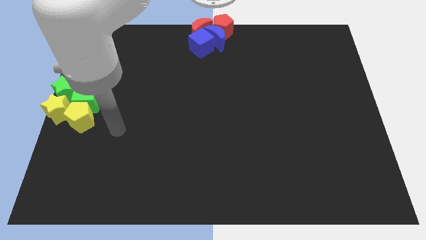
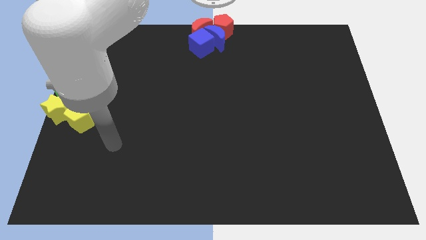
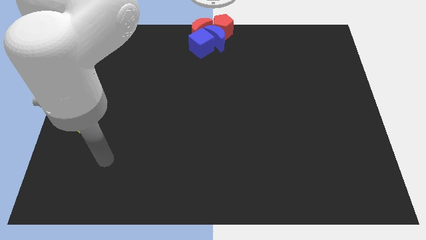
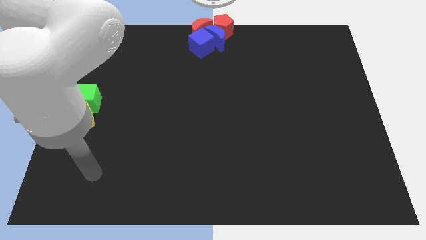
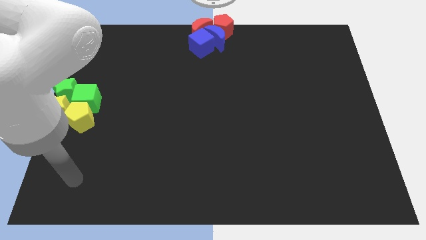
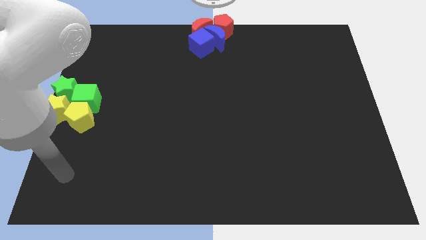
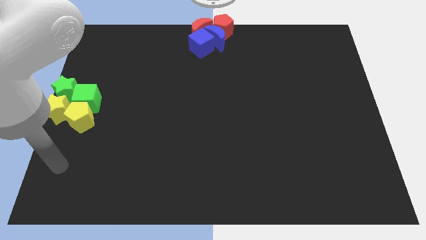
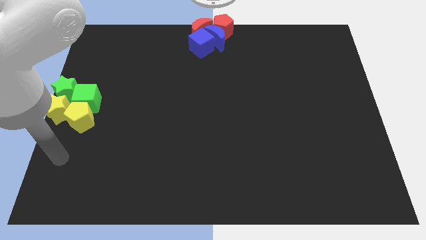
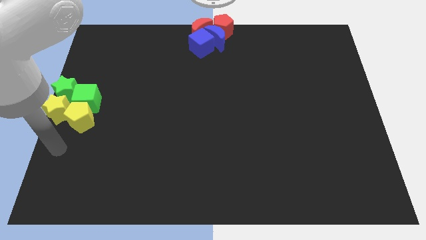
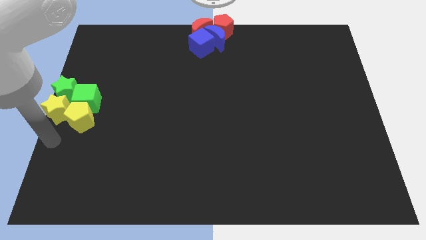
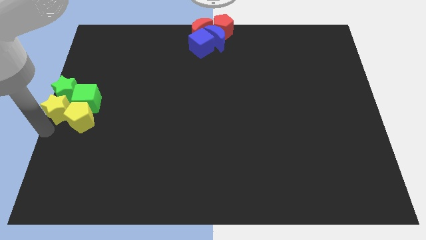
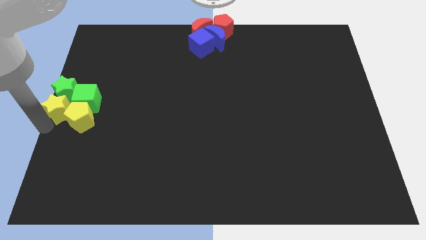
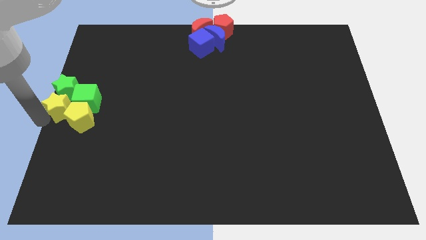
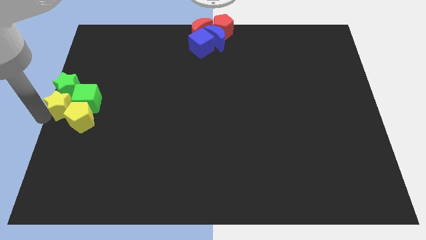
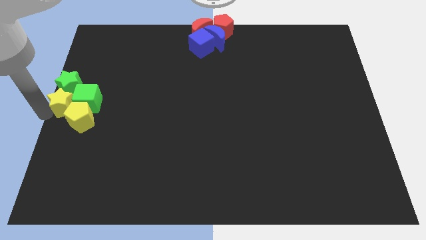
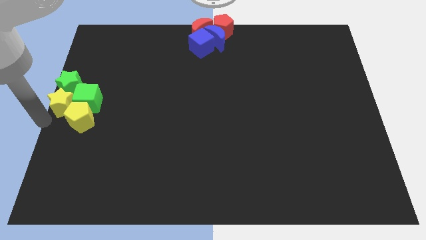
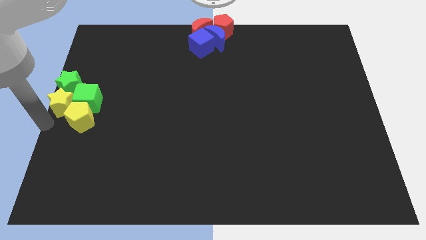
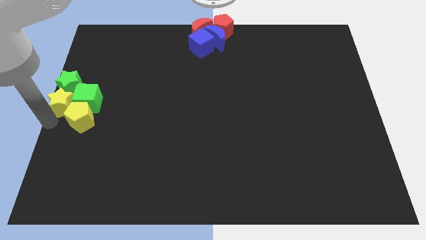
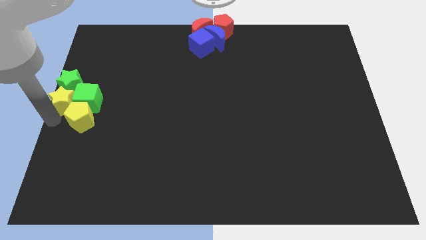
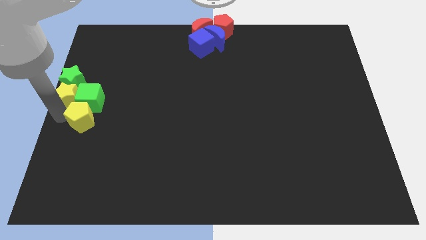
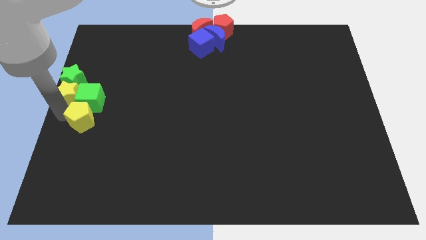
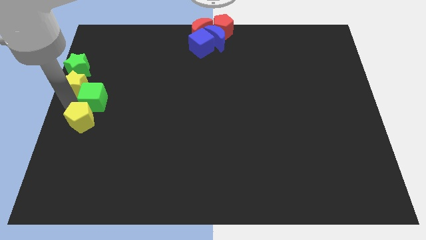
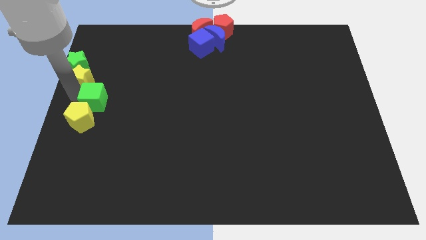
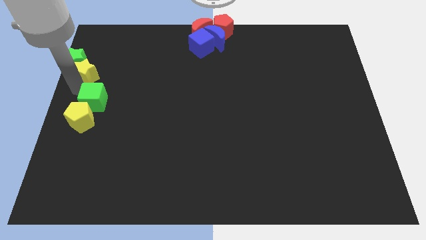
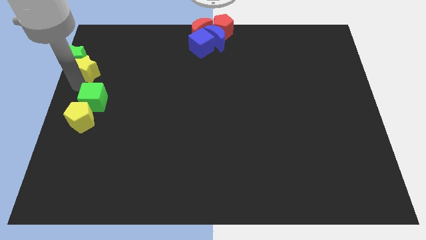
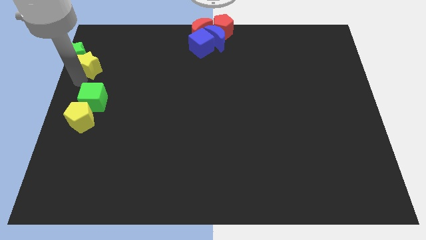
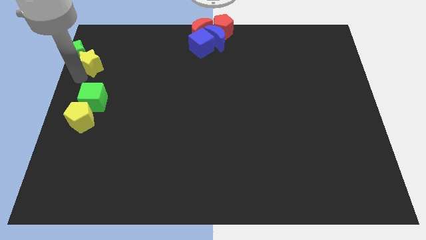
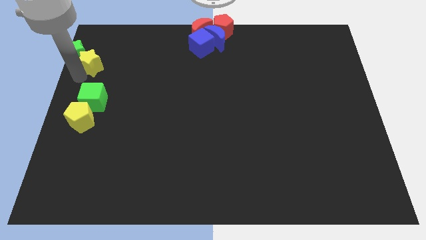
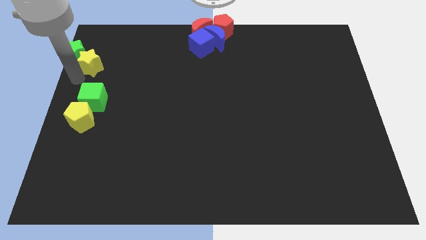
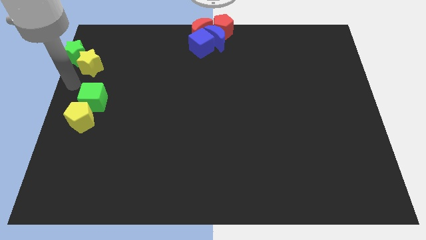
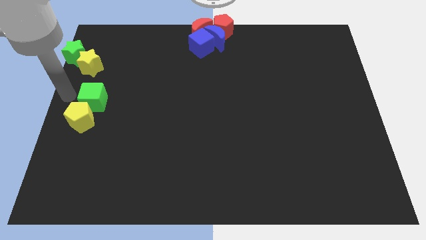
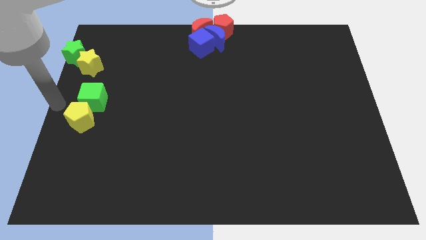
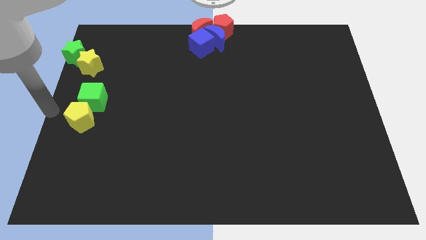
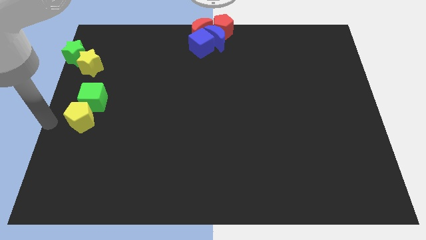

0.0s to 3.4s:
move yellow star and green star towards the top left

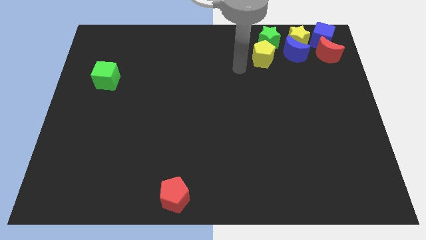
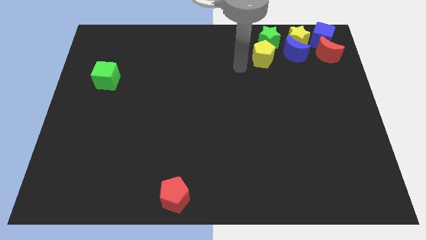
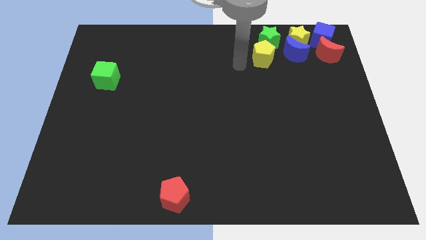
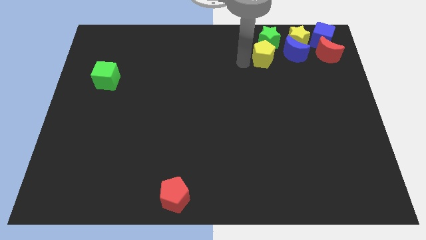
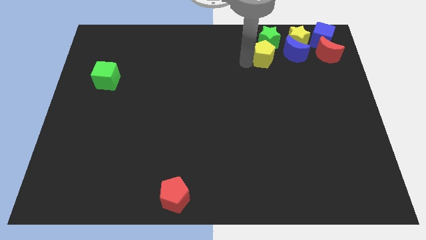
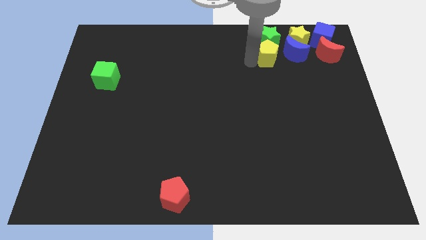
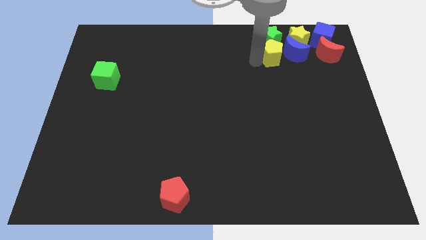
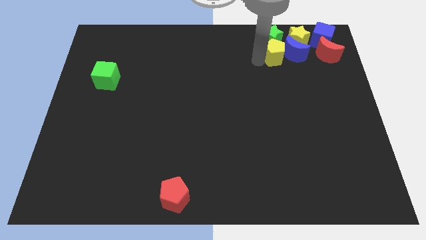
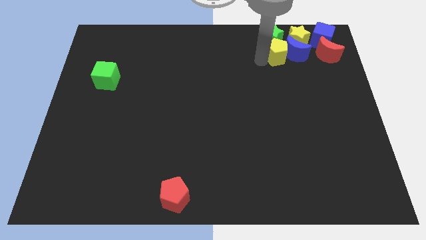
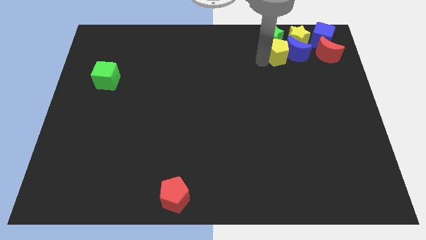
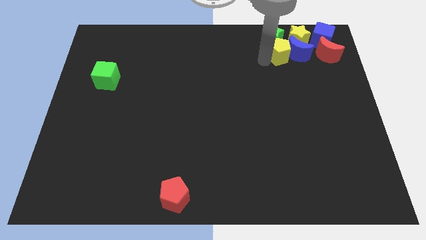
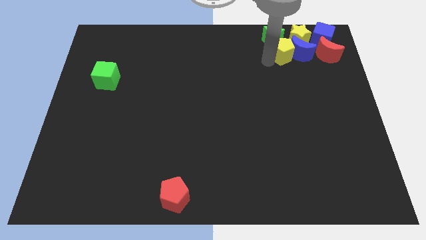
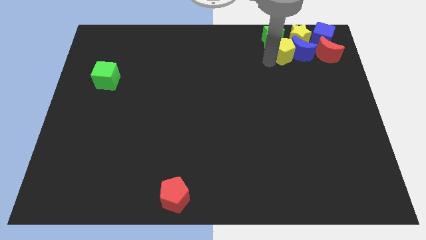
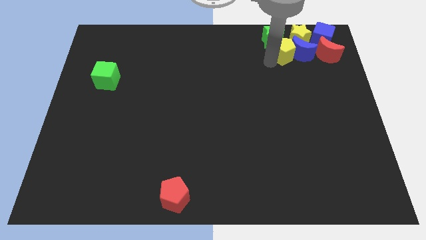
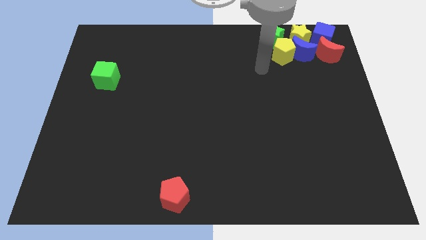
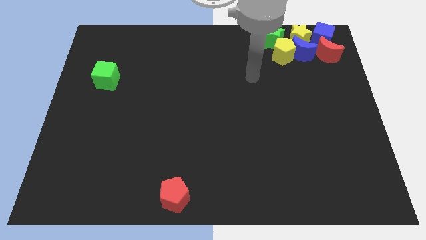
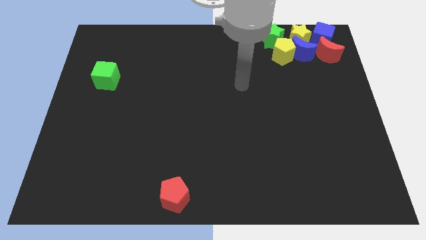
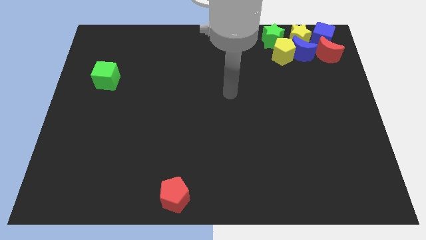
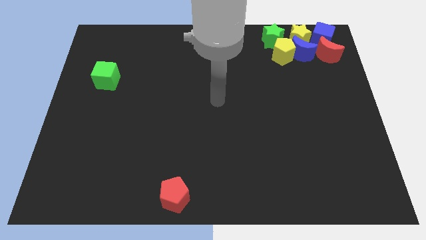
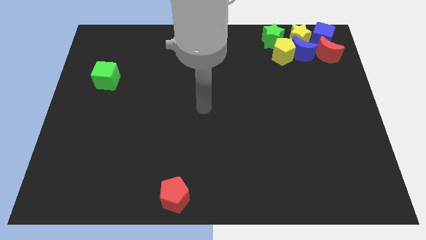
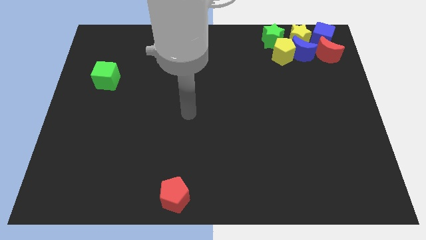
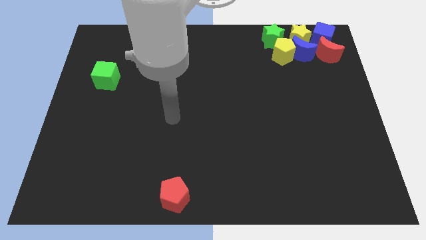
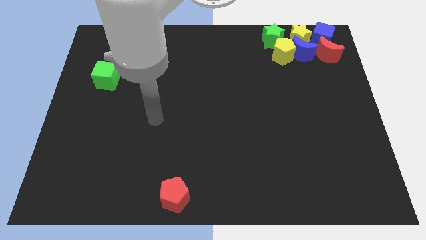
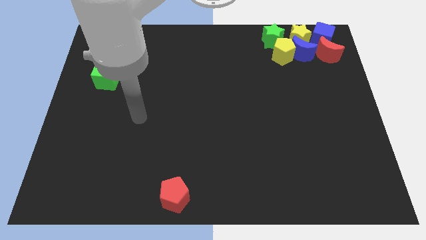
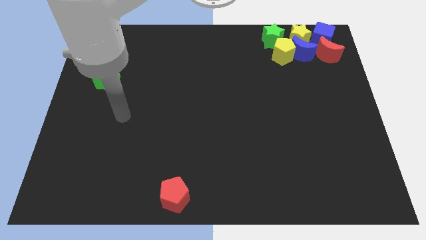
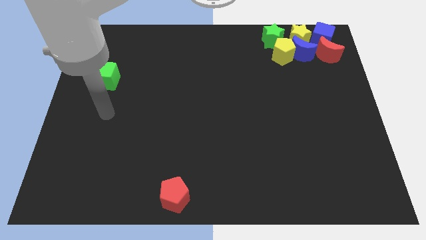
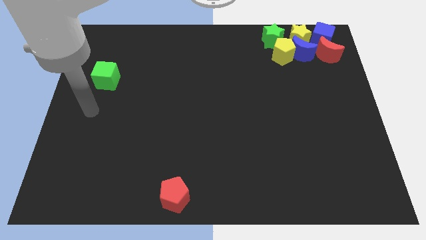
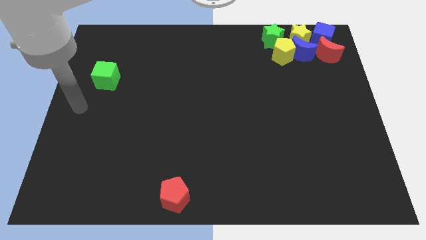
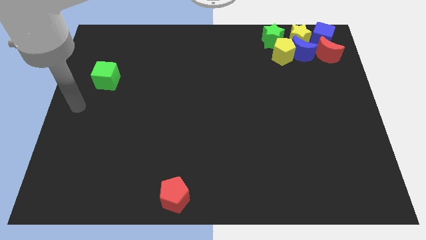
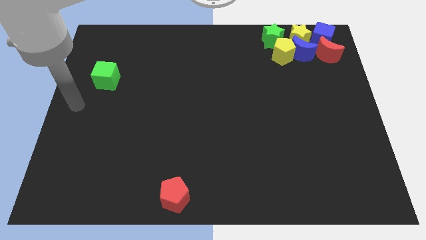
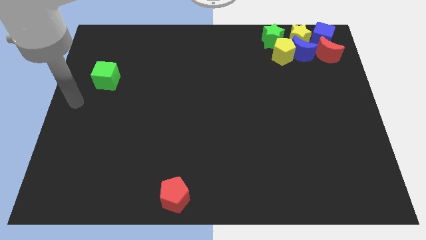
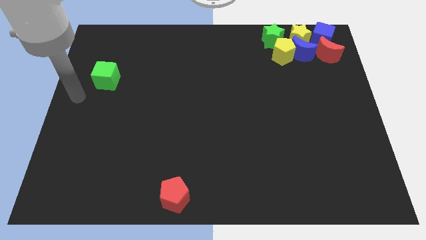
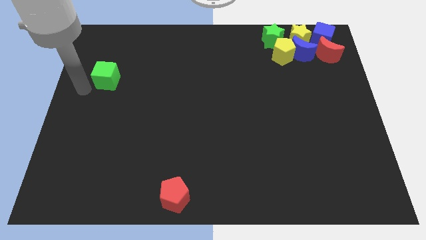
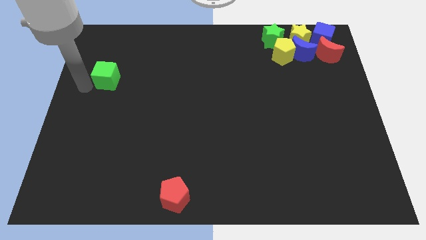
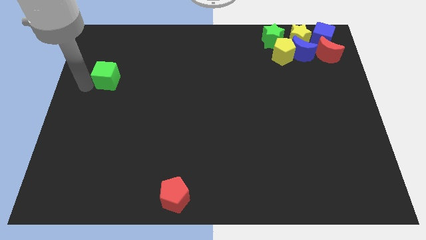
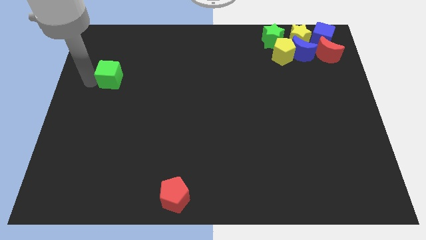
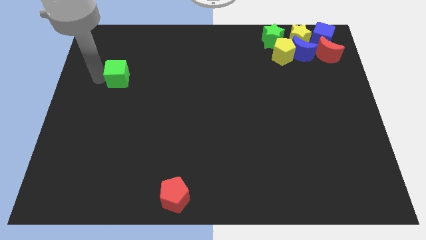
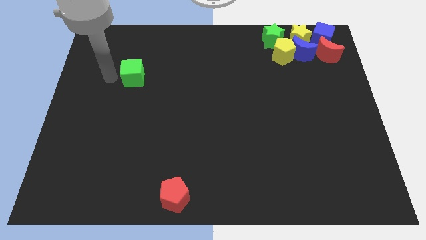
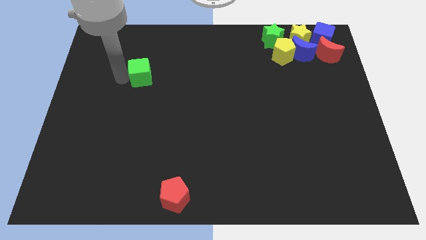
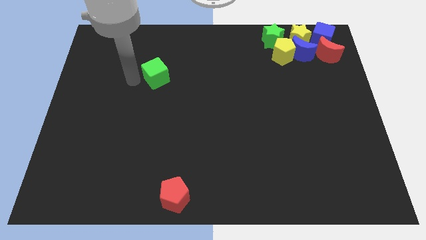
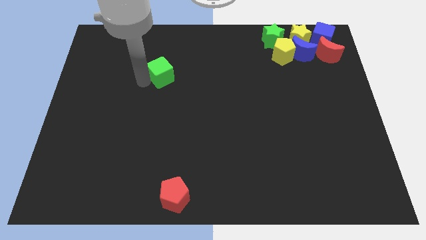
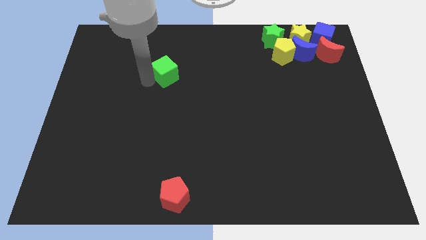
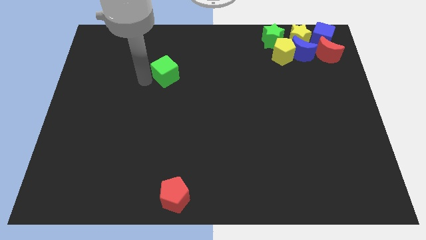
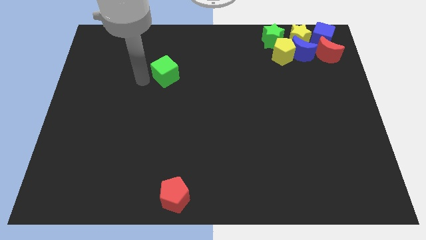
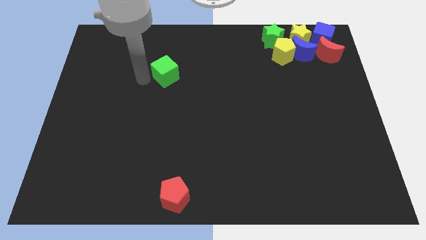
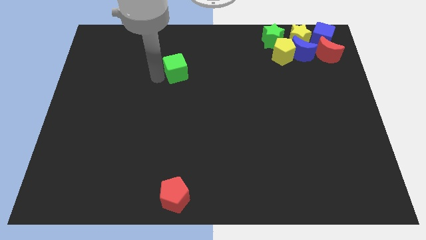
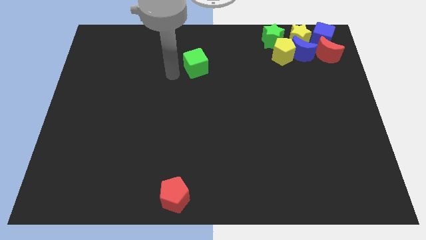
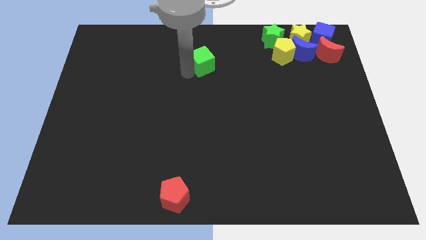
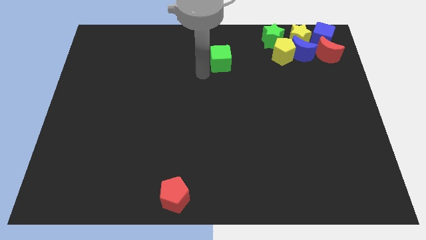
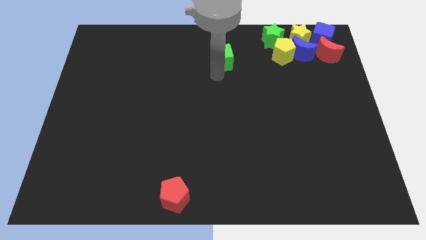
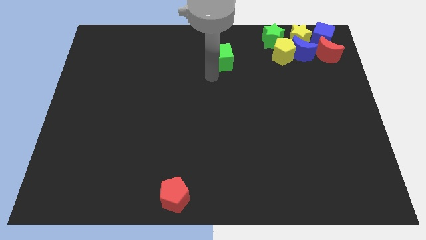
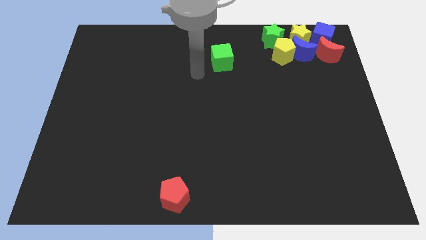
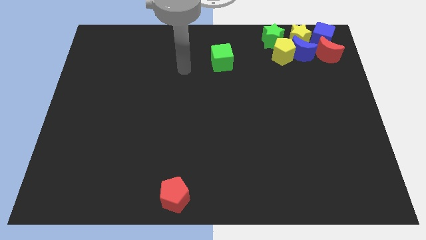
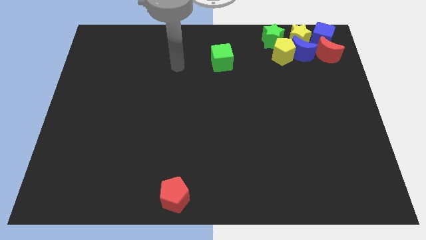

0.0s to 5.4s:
place the green cube to the left of the yellow pentagon
